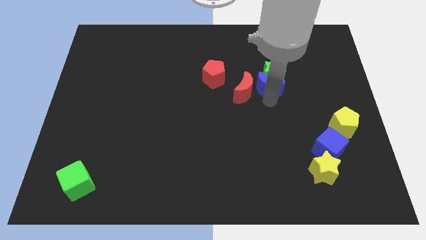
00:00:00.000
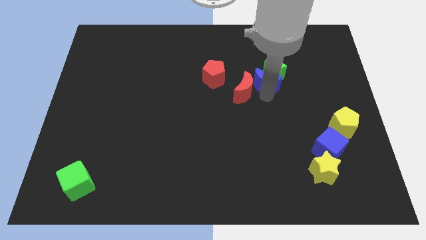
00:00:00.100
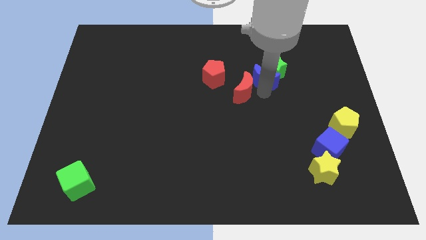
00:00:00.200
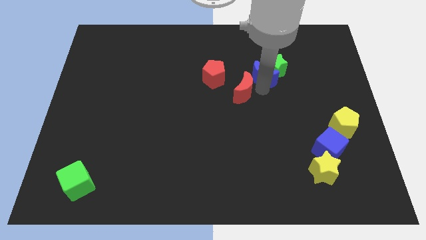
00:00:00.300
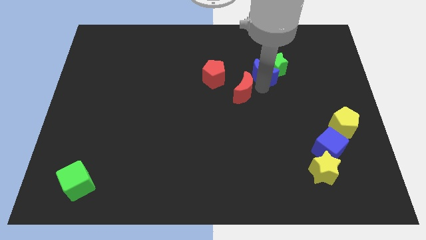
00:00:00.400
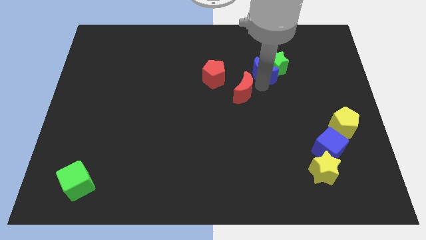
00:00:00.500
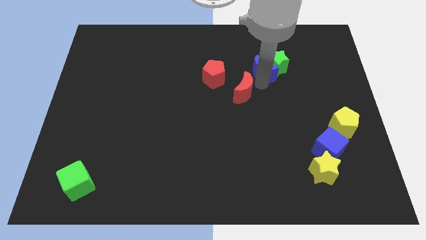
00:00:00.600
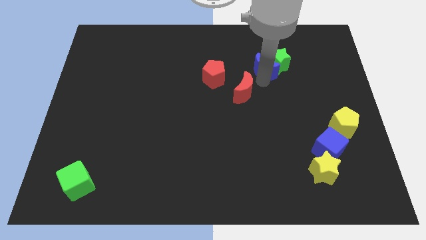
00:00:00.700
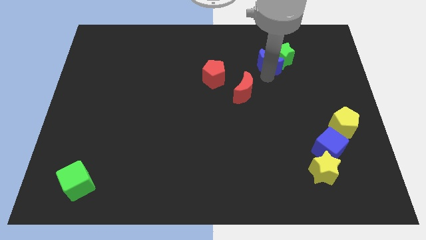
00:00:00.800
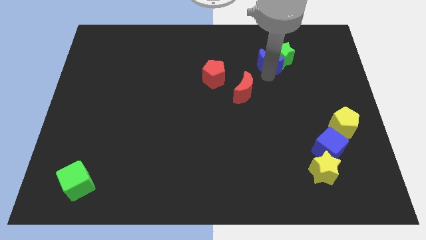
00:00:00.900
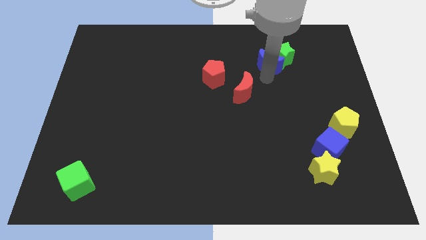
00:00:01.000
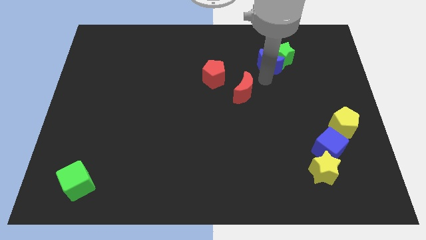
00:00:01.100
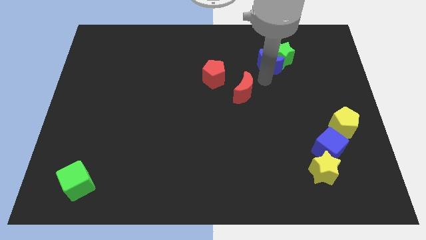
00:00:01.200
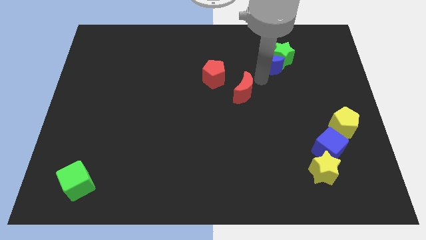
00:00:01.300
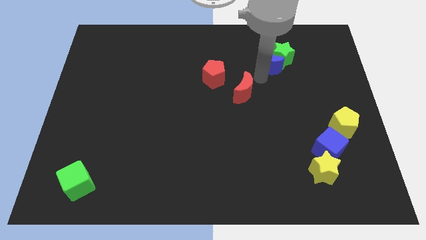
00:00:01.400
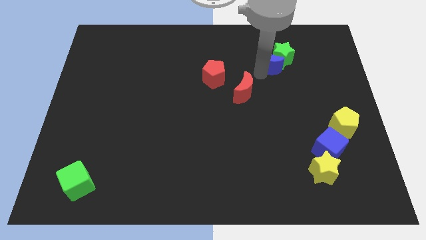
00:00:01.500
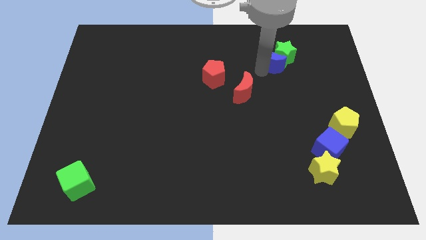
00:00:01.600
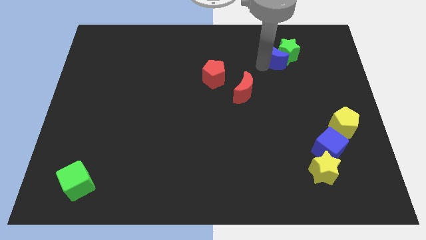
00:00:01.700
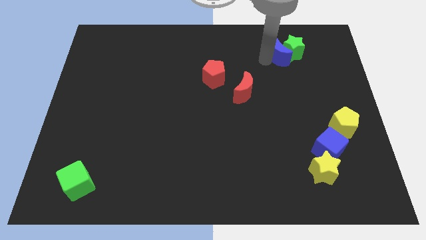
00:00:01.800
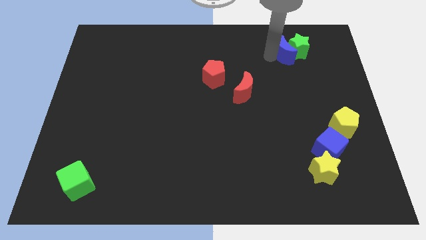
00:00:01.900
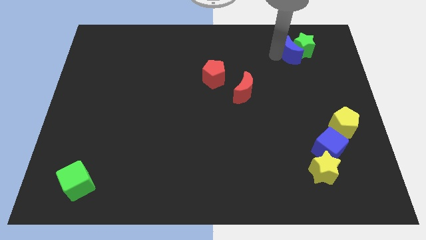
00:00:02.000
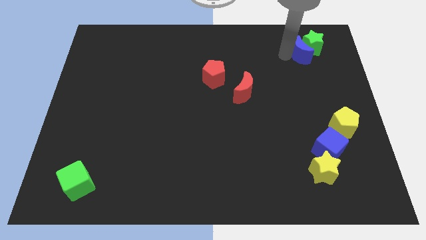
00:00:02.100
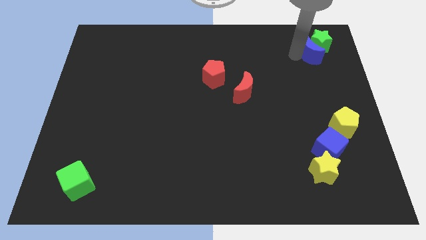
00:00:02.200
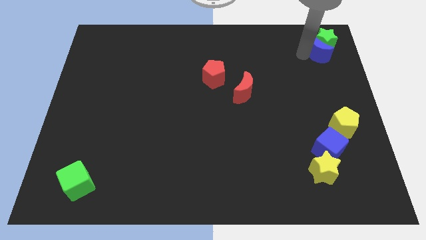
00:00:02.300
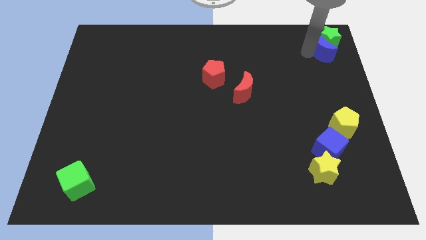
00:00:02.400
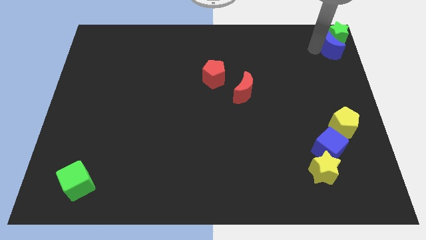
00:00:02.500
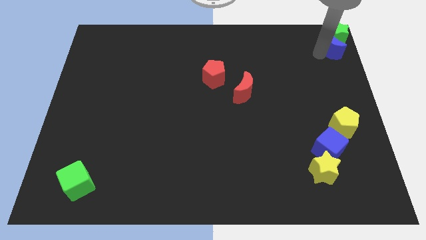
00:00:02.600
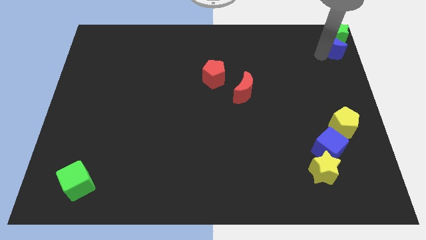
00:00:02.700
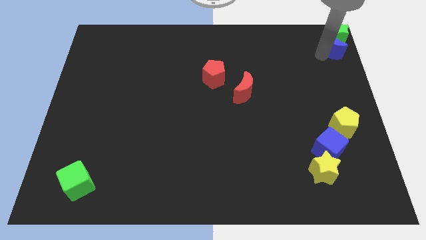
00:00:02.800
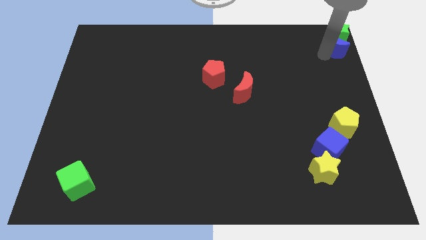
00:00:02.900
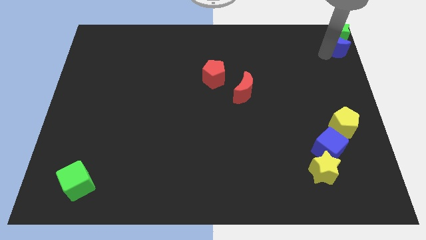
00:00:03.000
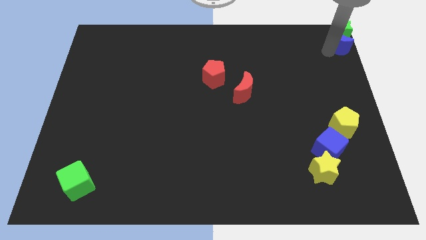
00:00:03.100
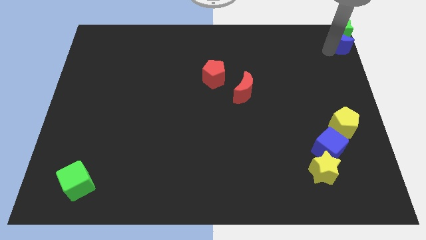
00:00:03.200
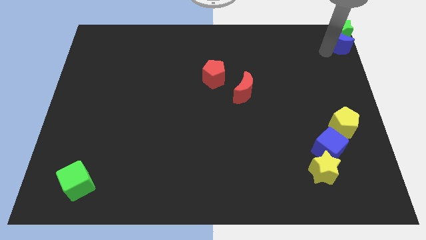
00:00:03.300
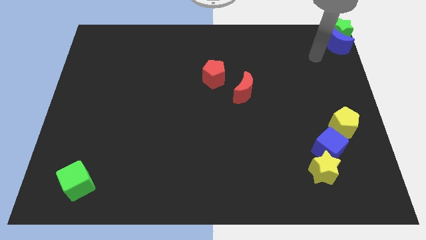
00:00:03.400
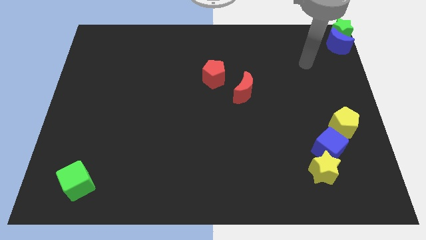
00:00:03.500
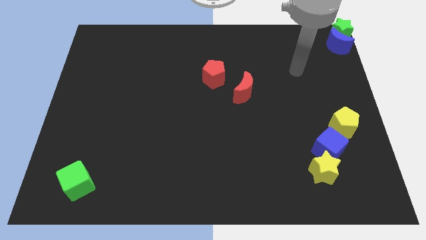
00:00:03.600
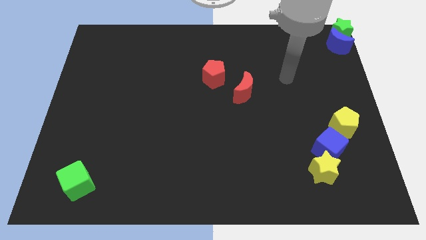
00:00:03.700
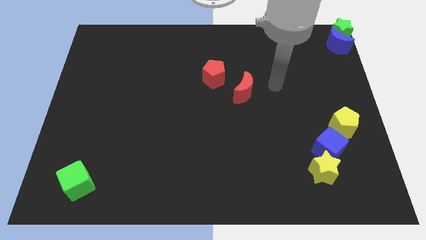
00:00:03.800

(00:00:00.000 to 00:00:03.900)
move blue moon along with green star to the top right corner

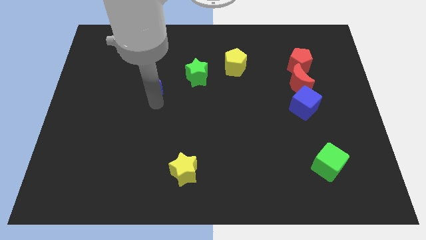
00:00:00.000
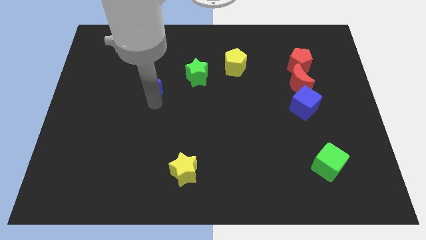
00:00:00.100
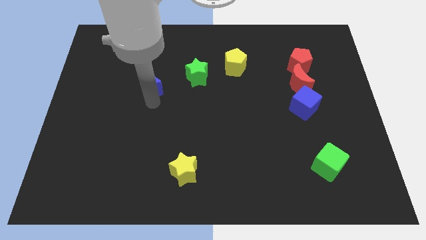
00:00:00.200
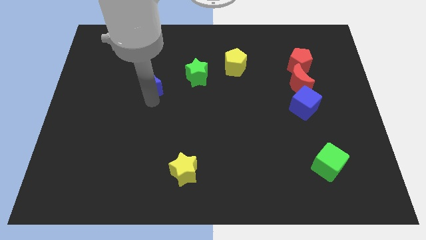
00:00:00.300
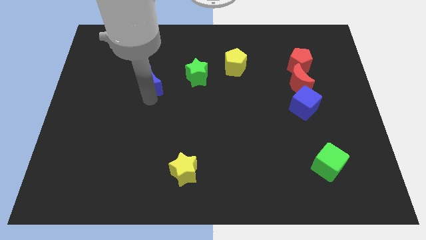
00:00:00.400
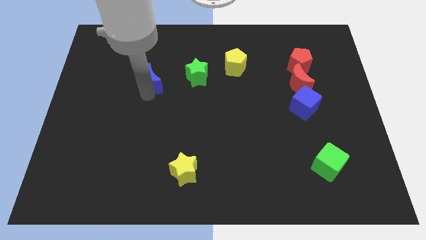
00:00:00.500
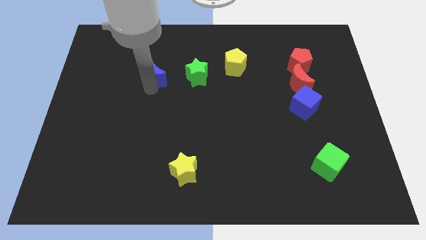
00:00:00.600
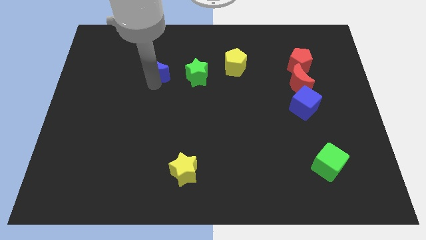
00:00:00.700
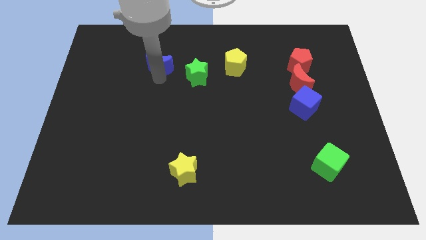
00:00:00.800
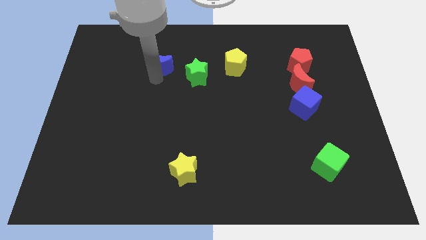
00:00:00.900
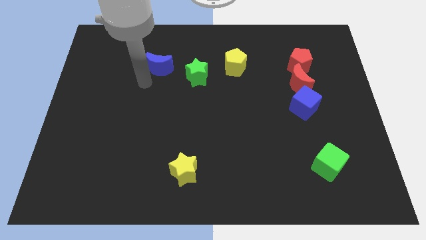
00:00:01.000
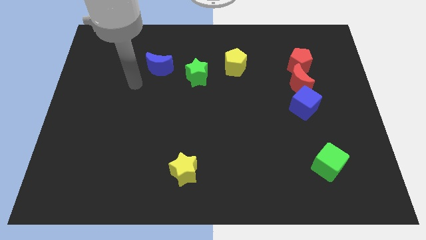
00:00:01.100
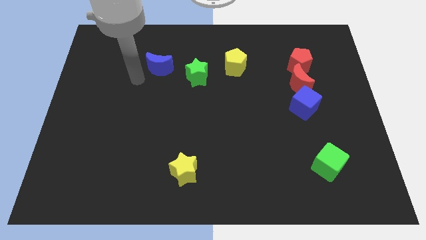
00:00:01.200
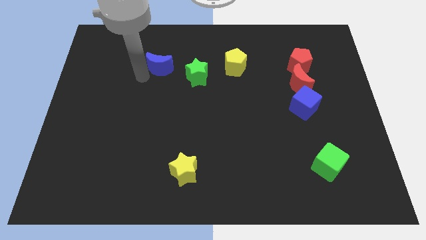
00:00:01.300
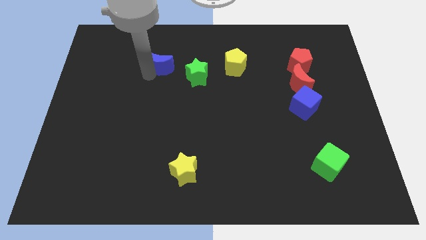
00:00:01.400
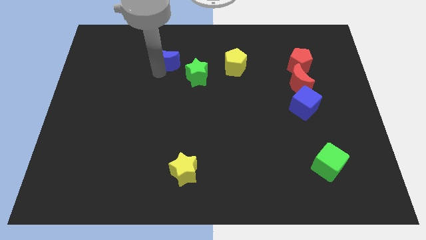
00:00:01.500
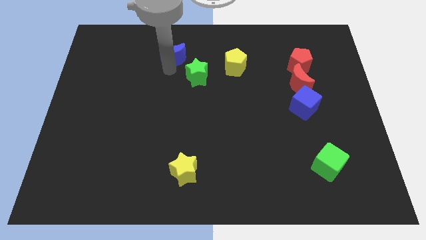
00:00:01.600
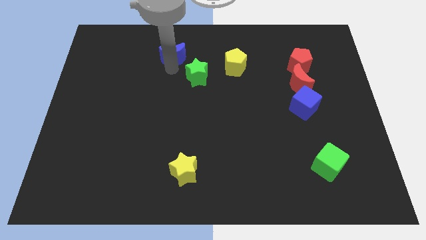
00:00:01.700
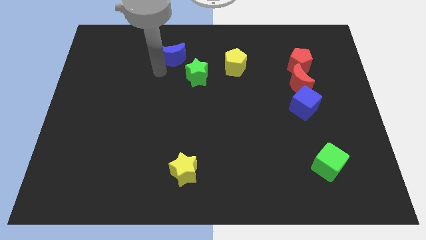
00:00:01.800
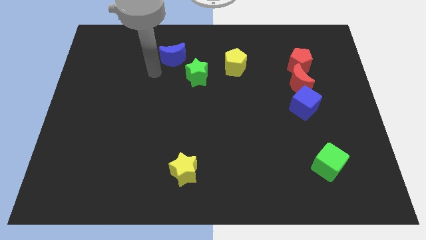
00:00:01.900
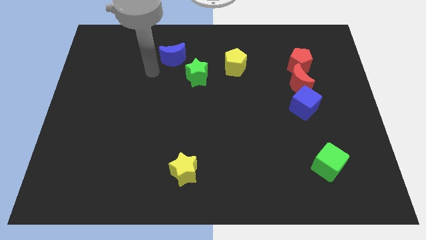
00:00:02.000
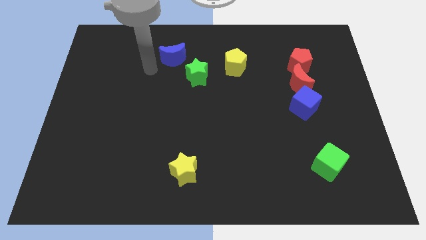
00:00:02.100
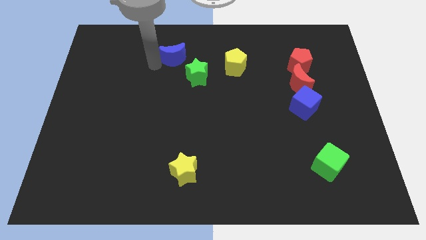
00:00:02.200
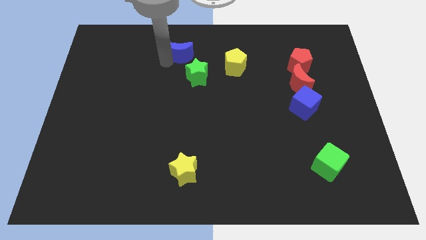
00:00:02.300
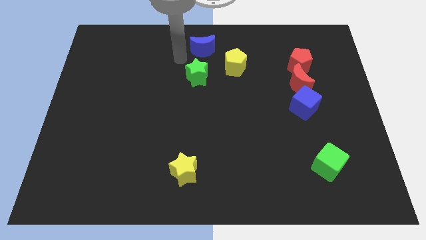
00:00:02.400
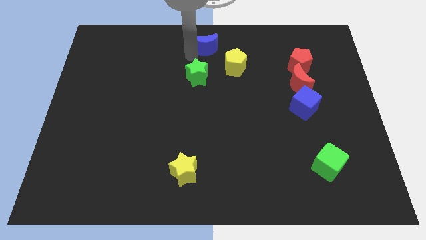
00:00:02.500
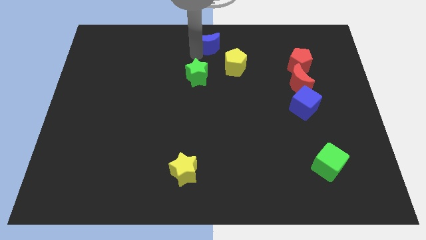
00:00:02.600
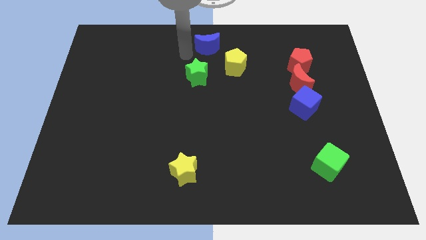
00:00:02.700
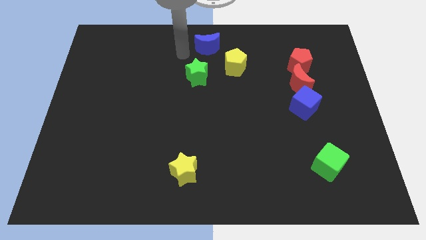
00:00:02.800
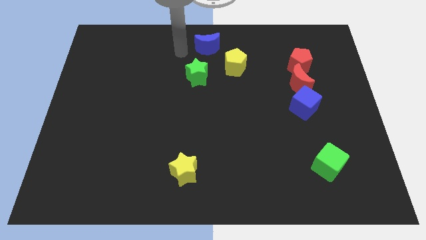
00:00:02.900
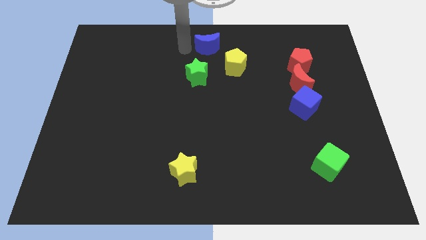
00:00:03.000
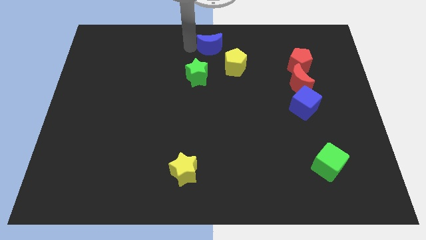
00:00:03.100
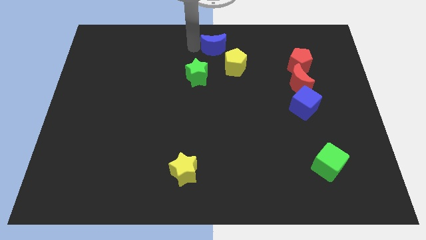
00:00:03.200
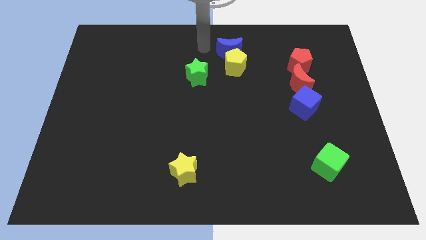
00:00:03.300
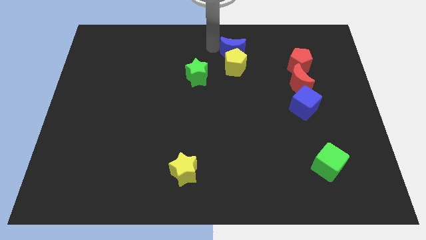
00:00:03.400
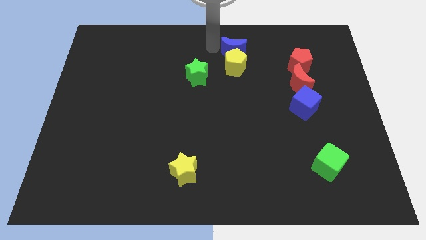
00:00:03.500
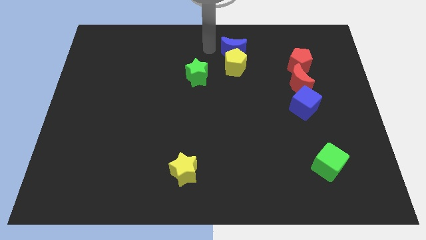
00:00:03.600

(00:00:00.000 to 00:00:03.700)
move the blue crescent to the top of yellow pentagon

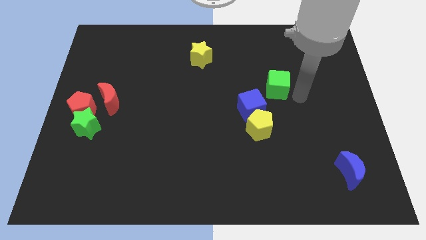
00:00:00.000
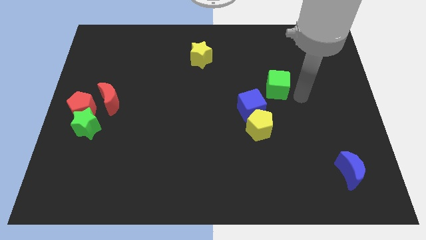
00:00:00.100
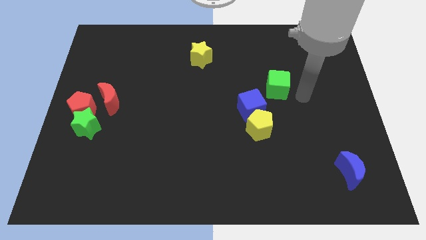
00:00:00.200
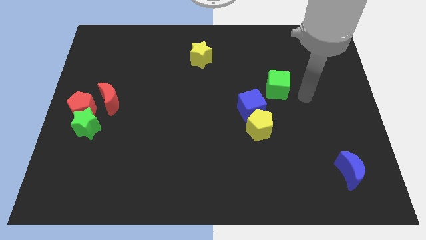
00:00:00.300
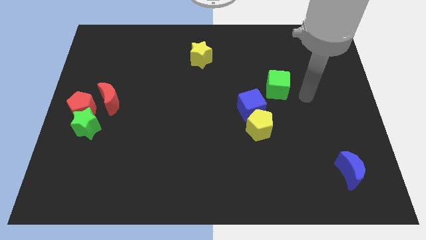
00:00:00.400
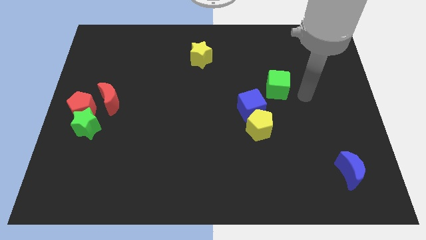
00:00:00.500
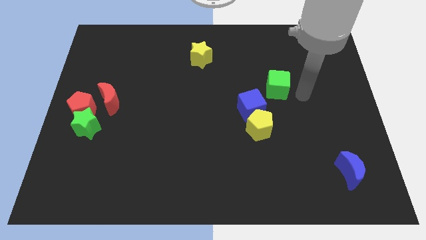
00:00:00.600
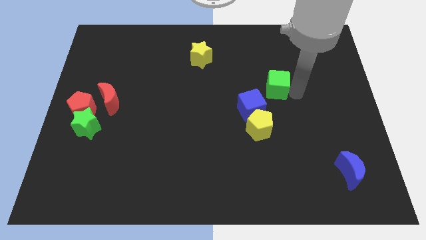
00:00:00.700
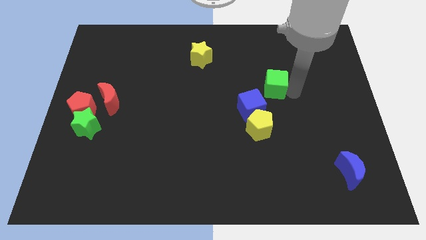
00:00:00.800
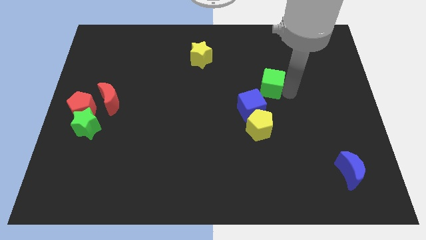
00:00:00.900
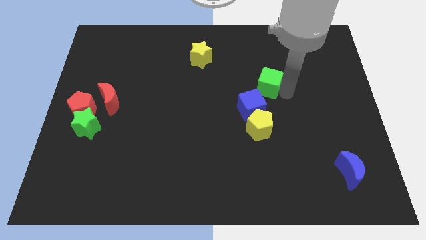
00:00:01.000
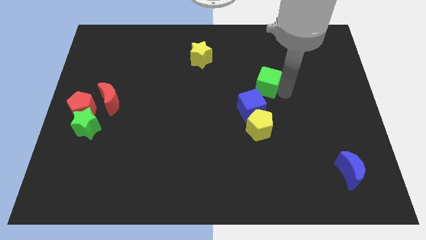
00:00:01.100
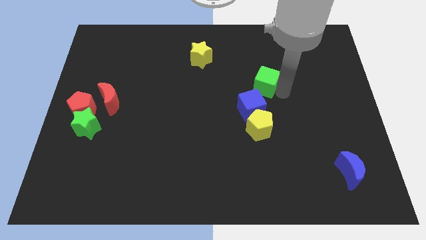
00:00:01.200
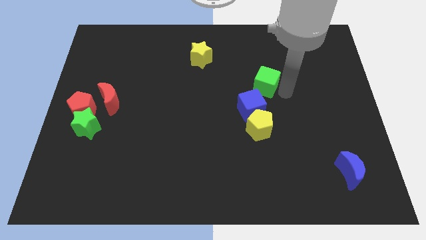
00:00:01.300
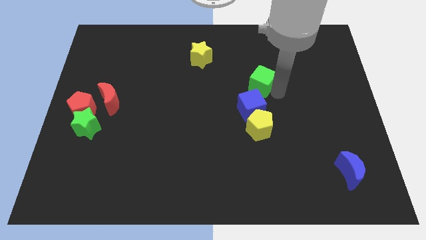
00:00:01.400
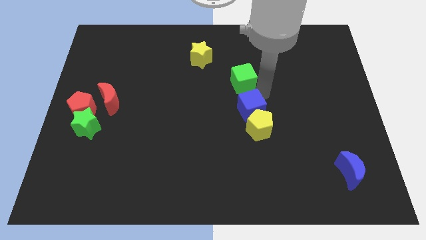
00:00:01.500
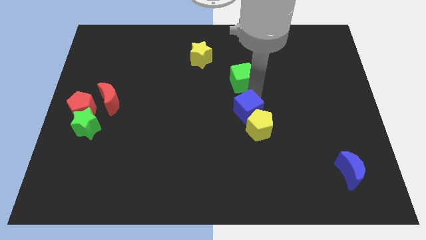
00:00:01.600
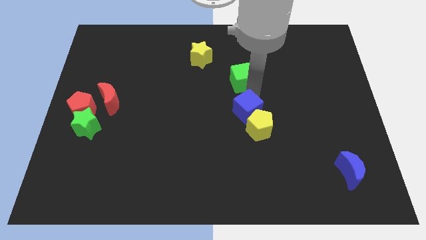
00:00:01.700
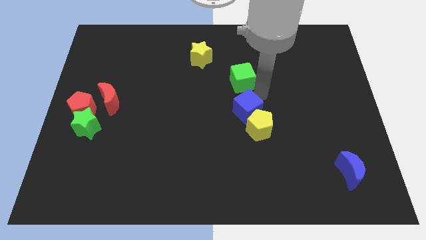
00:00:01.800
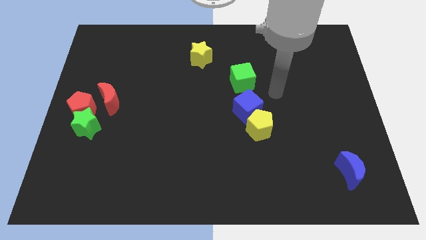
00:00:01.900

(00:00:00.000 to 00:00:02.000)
put the green cube above the blue cube
